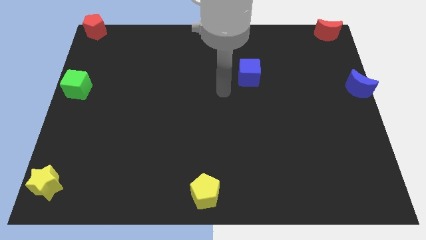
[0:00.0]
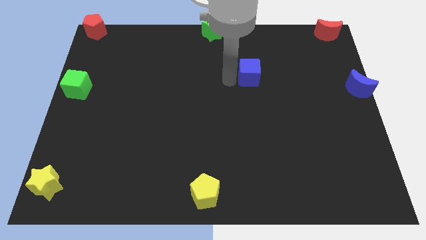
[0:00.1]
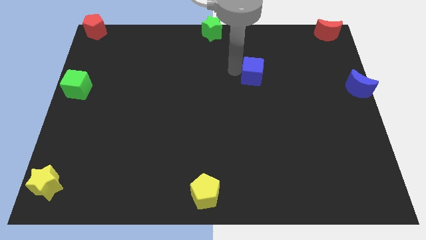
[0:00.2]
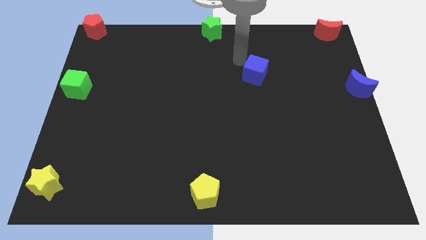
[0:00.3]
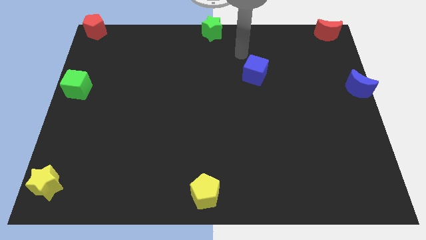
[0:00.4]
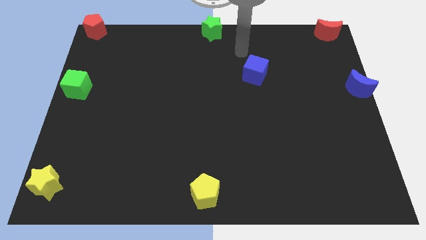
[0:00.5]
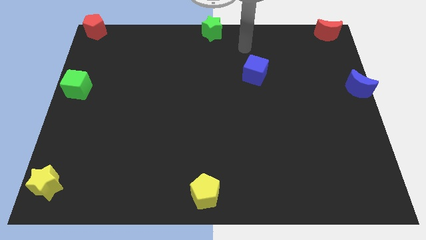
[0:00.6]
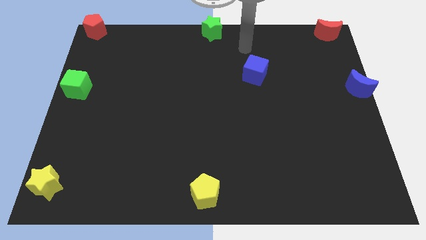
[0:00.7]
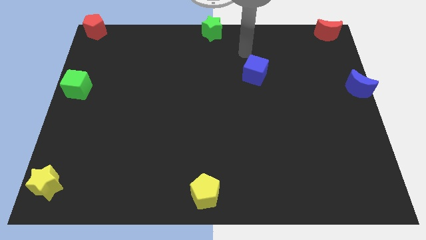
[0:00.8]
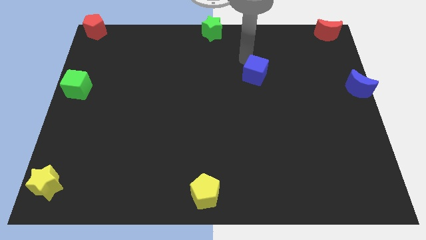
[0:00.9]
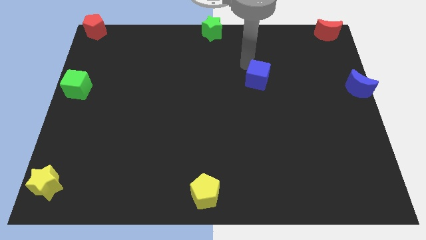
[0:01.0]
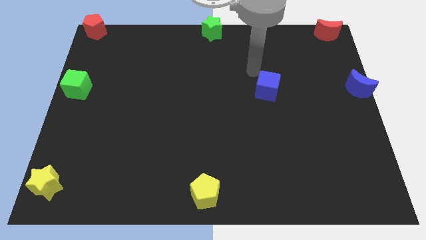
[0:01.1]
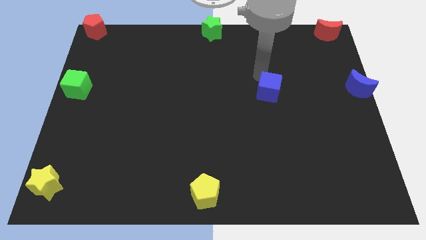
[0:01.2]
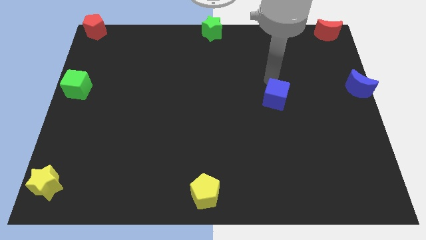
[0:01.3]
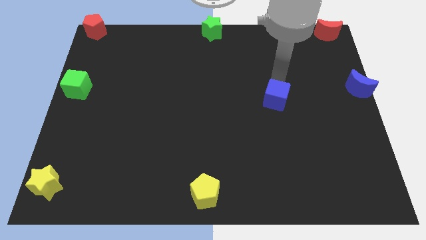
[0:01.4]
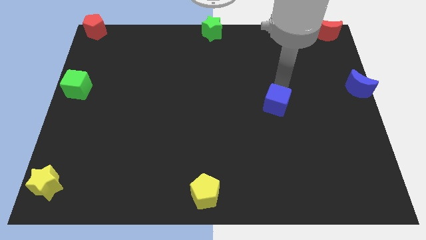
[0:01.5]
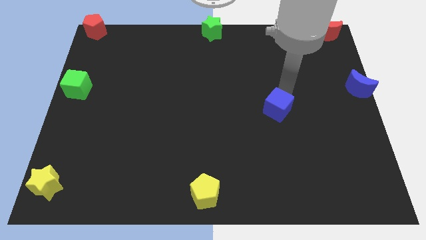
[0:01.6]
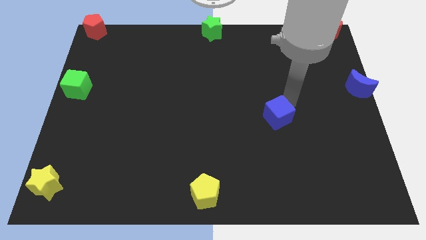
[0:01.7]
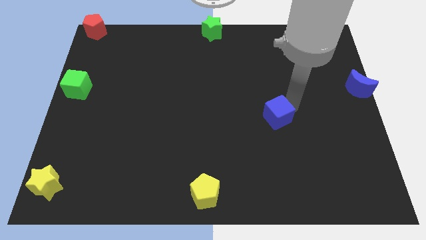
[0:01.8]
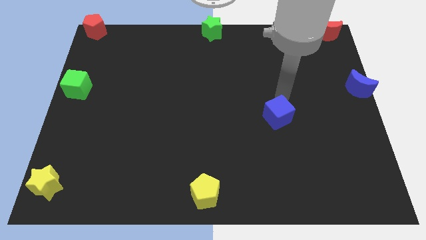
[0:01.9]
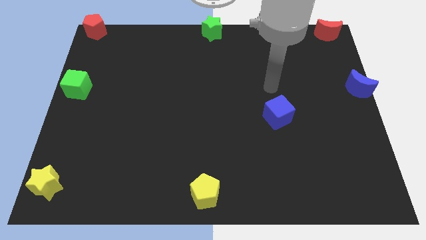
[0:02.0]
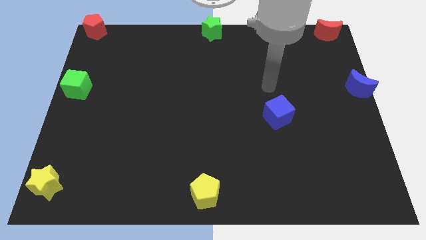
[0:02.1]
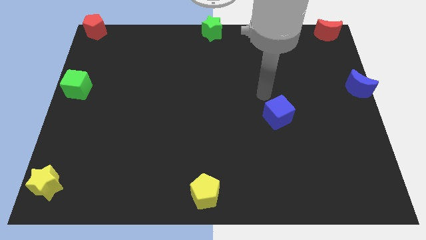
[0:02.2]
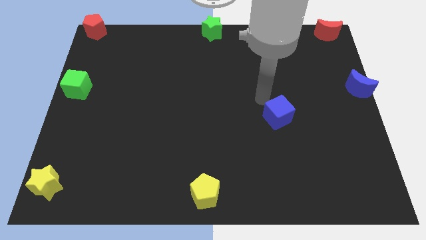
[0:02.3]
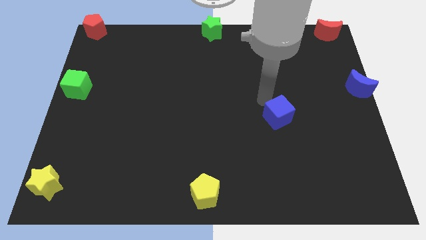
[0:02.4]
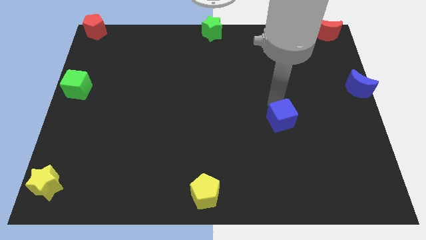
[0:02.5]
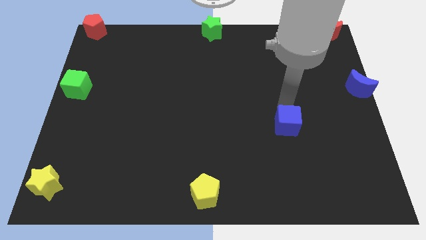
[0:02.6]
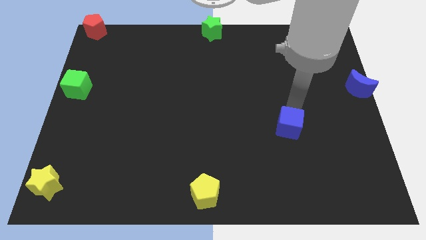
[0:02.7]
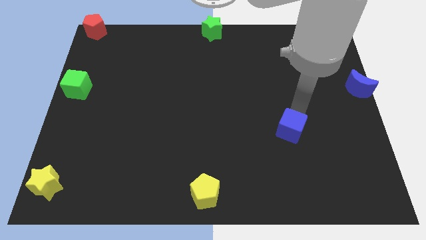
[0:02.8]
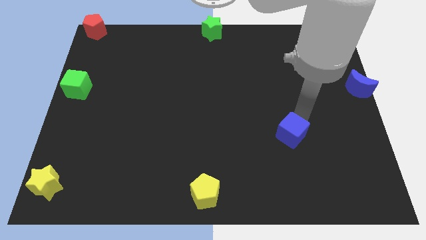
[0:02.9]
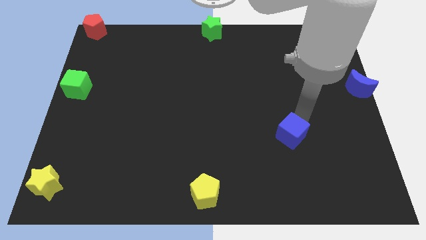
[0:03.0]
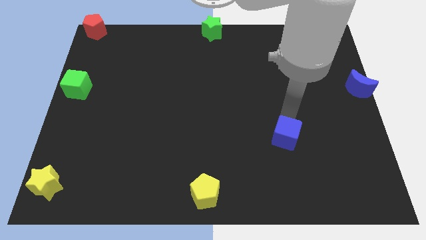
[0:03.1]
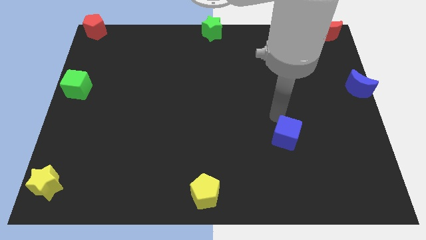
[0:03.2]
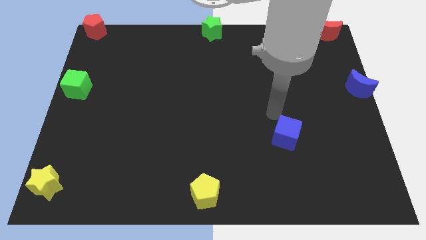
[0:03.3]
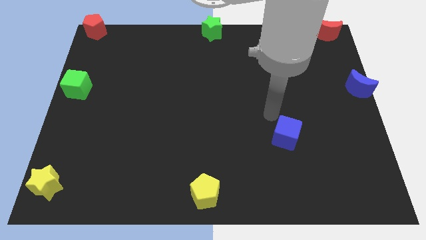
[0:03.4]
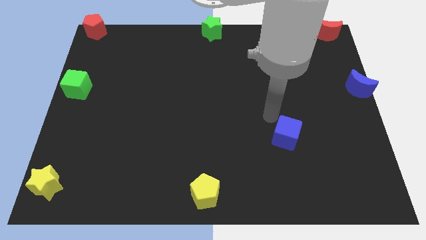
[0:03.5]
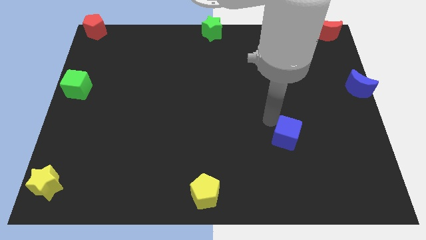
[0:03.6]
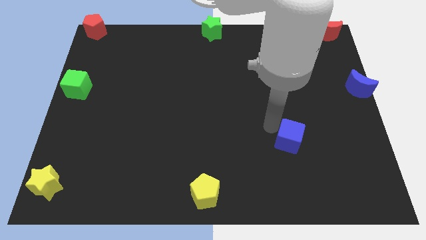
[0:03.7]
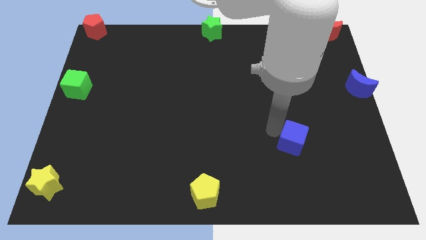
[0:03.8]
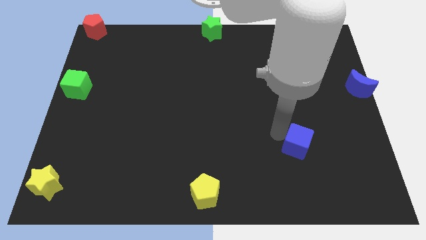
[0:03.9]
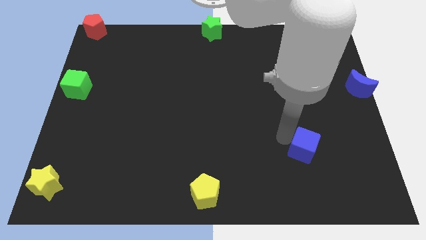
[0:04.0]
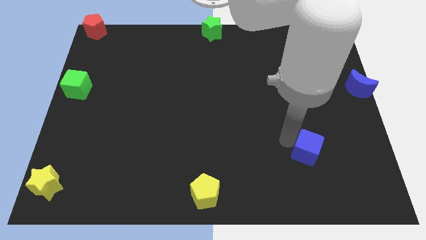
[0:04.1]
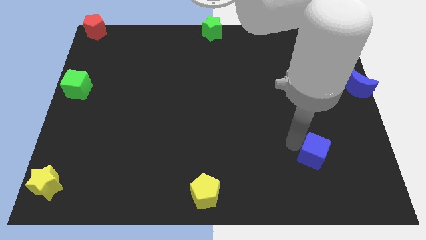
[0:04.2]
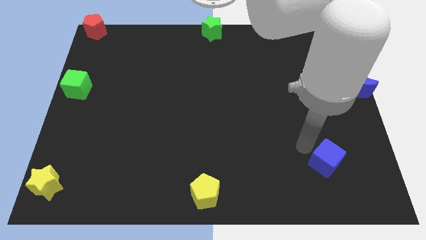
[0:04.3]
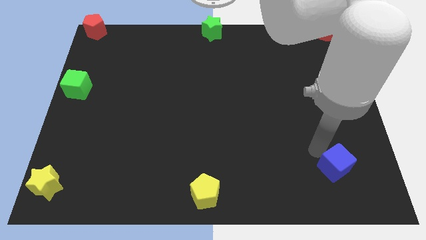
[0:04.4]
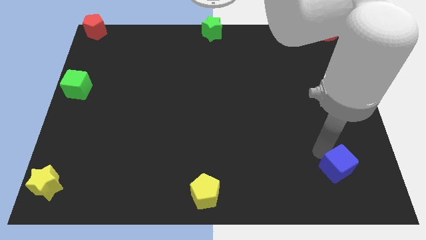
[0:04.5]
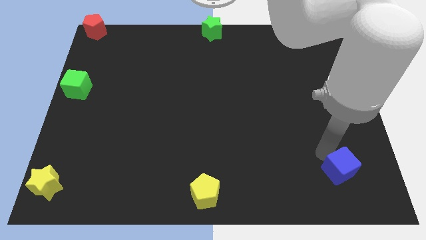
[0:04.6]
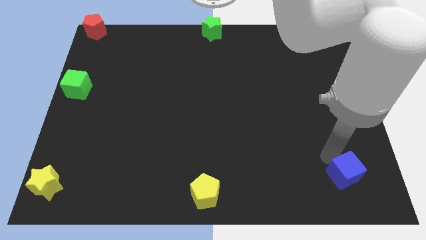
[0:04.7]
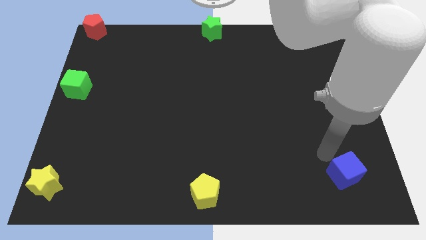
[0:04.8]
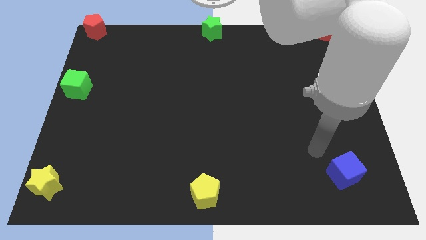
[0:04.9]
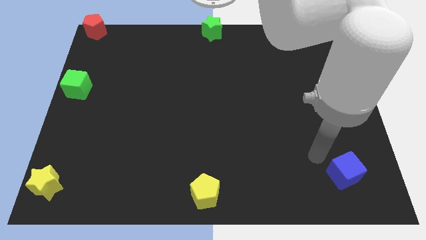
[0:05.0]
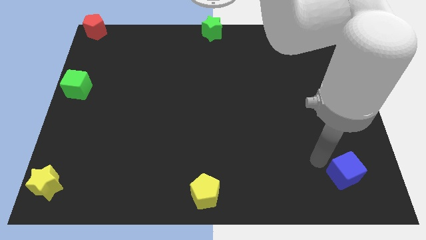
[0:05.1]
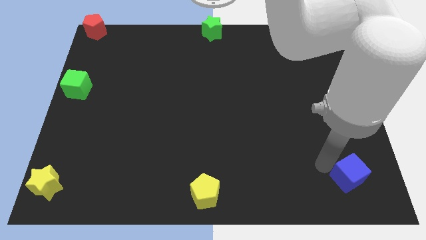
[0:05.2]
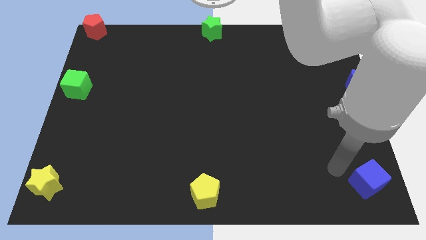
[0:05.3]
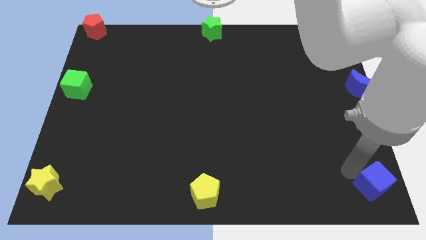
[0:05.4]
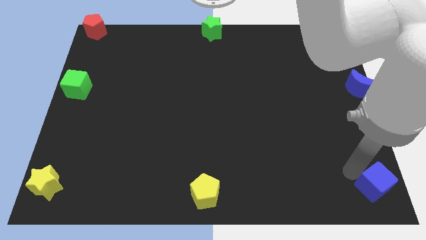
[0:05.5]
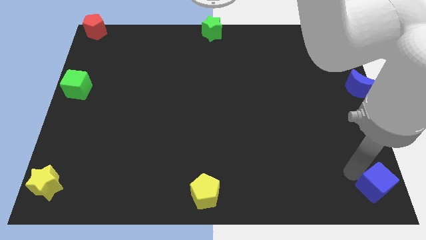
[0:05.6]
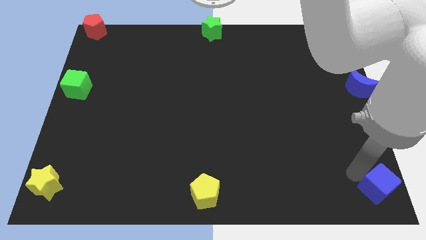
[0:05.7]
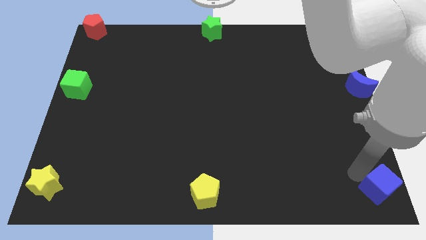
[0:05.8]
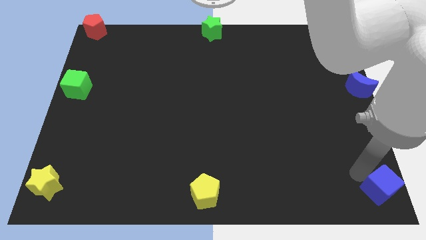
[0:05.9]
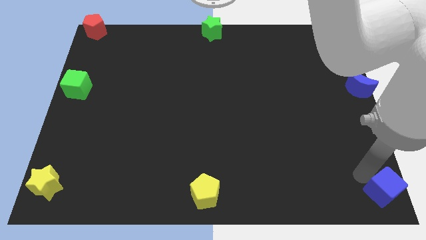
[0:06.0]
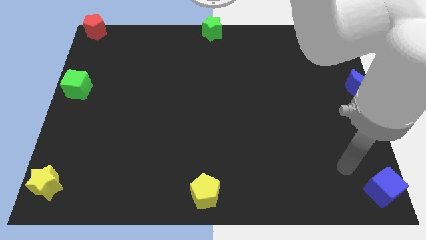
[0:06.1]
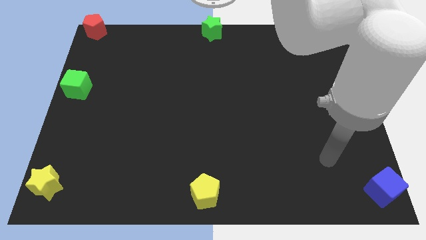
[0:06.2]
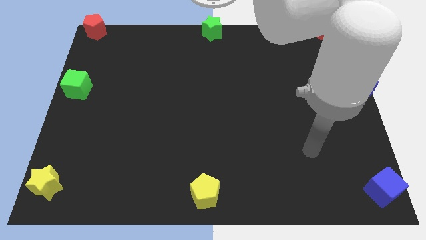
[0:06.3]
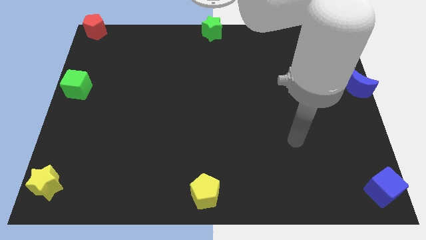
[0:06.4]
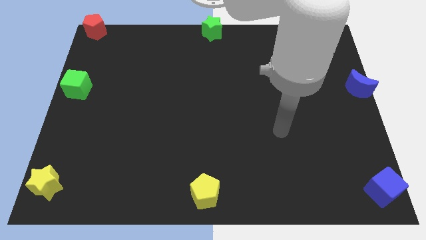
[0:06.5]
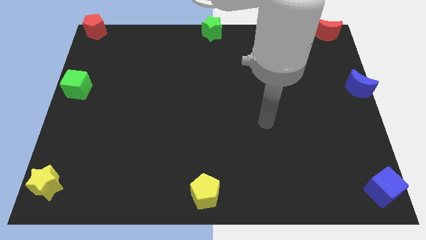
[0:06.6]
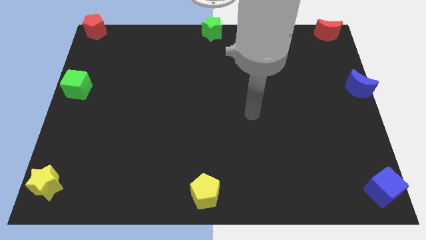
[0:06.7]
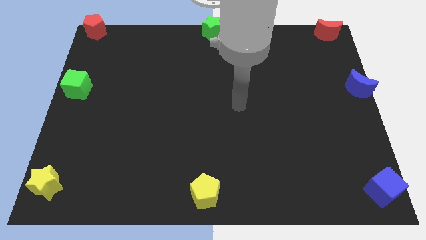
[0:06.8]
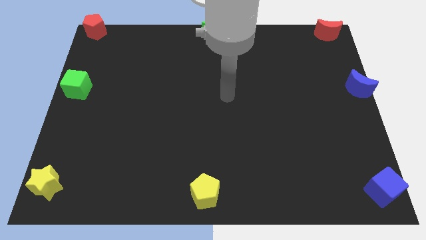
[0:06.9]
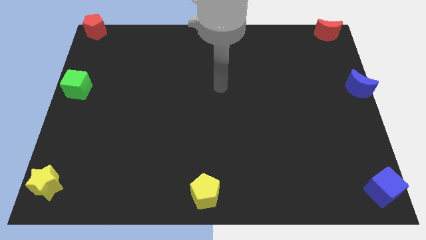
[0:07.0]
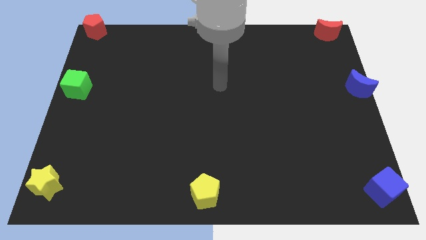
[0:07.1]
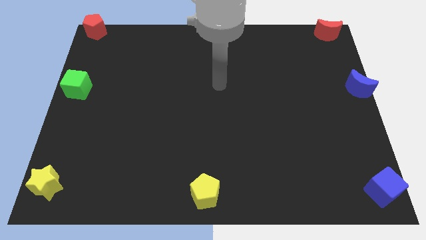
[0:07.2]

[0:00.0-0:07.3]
move the blue cube to the bottom right corner

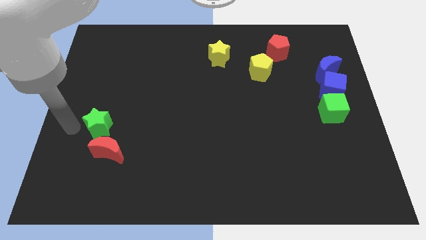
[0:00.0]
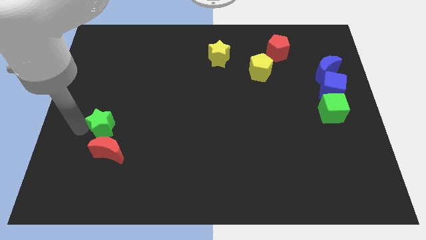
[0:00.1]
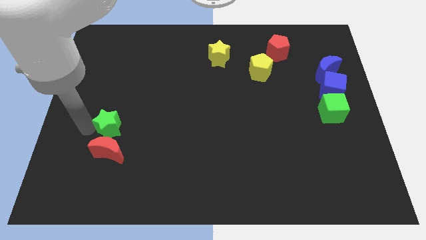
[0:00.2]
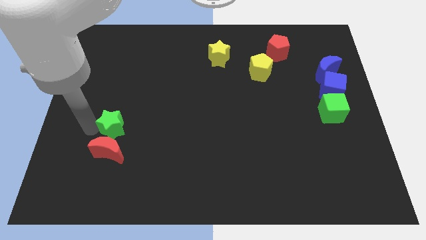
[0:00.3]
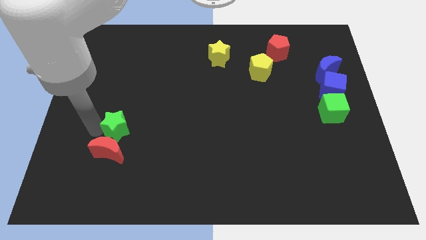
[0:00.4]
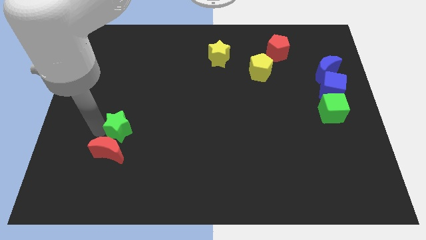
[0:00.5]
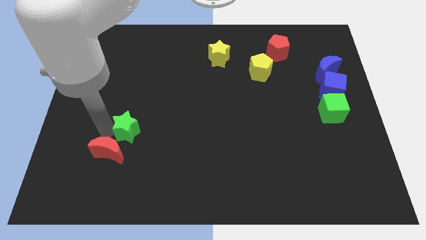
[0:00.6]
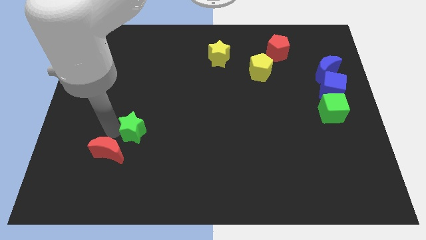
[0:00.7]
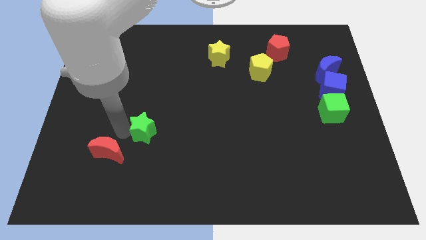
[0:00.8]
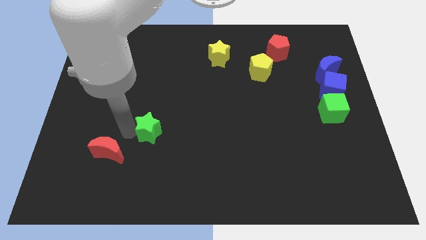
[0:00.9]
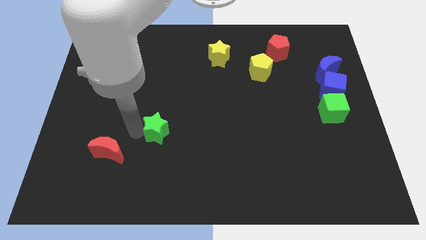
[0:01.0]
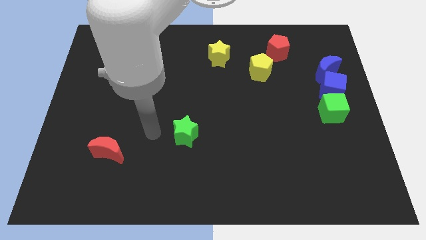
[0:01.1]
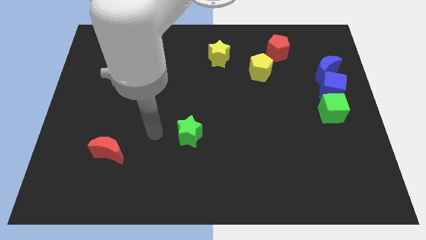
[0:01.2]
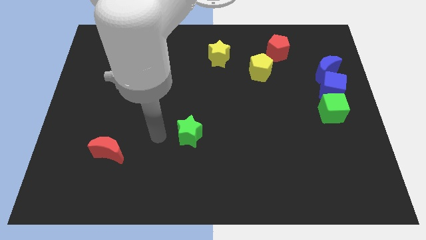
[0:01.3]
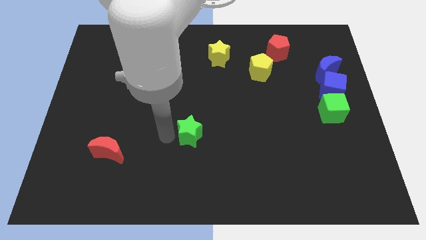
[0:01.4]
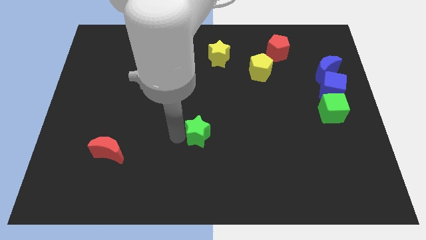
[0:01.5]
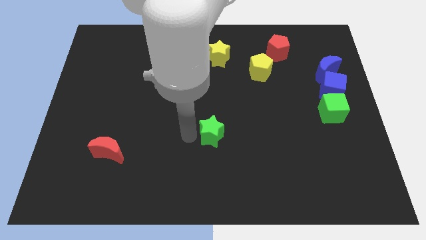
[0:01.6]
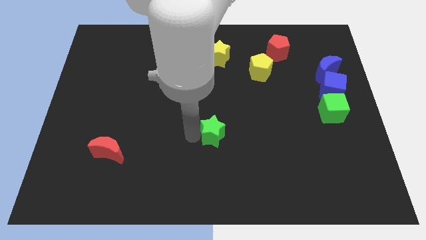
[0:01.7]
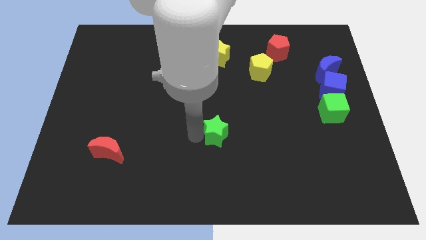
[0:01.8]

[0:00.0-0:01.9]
move the green star to the vertical bottom side of the yellow star
